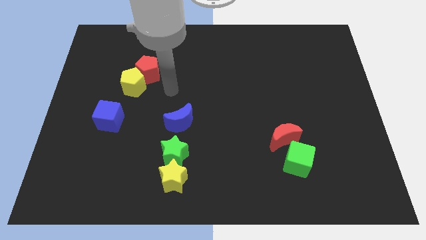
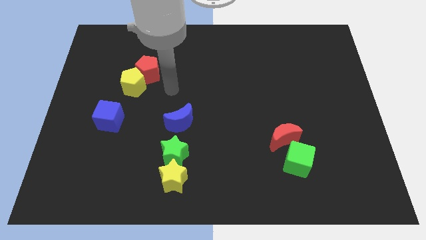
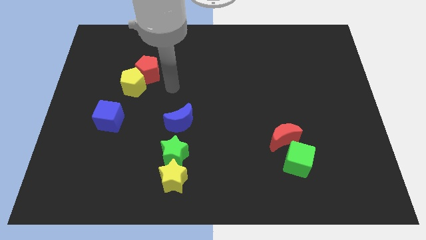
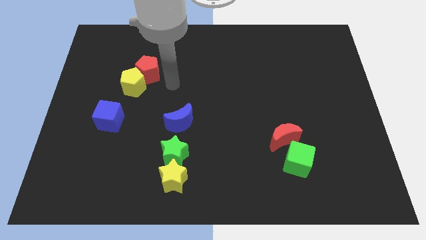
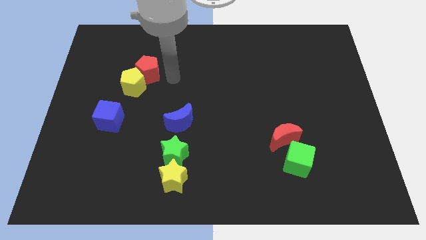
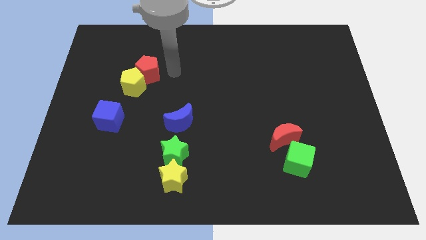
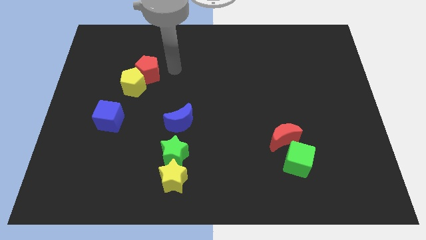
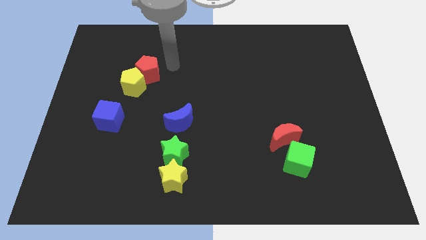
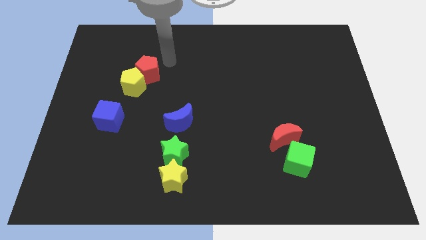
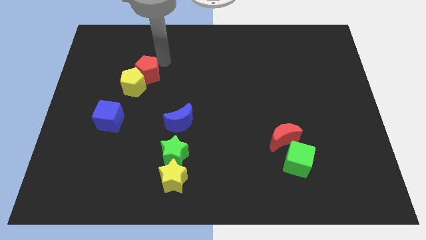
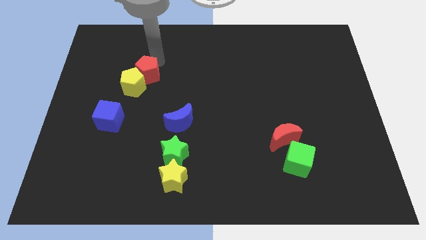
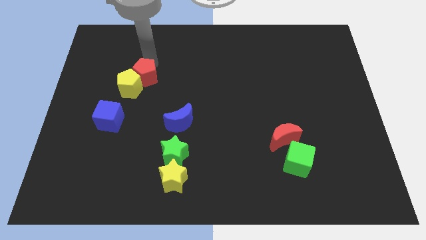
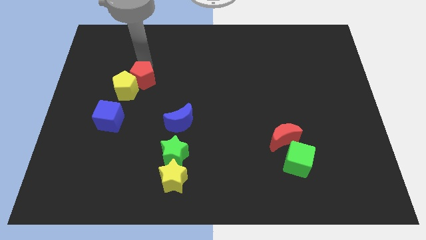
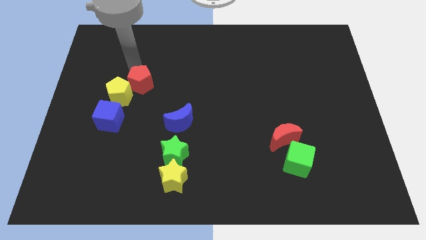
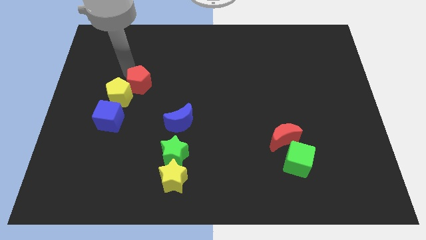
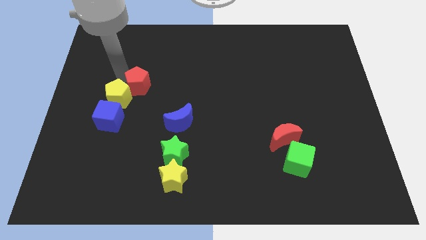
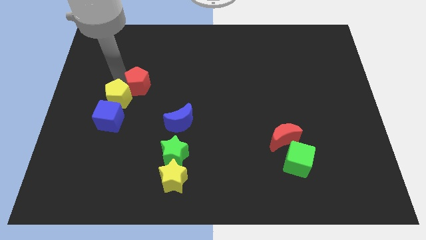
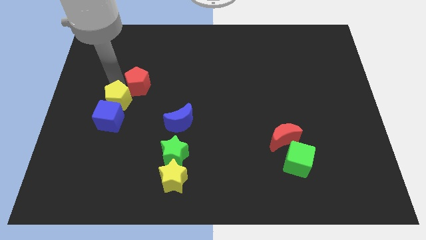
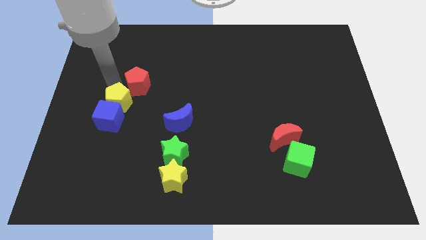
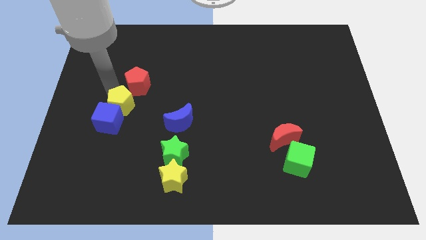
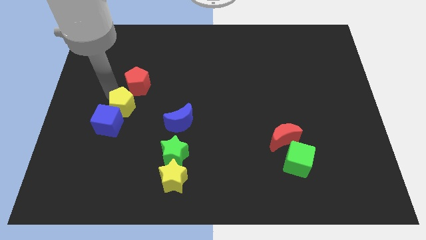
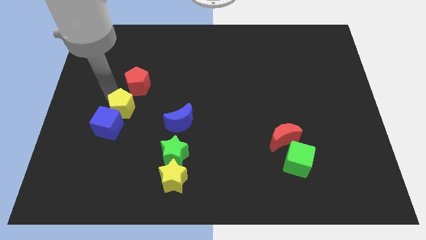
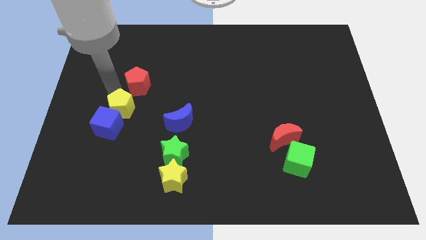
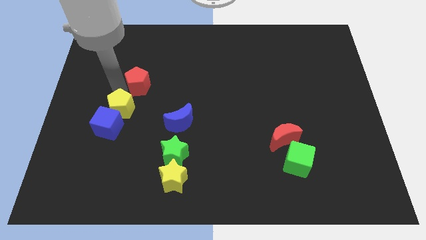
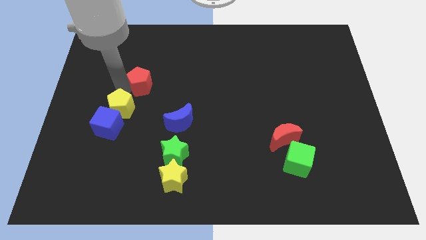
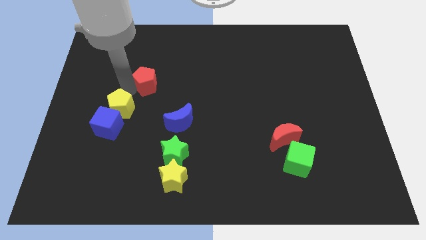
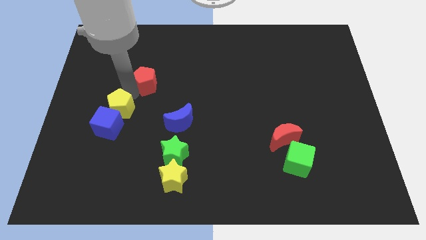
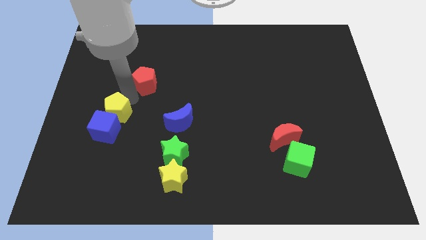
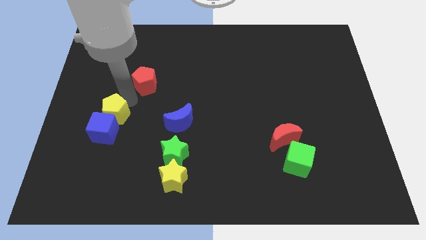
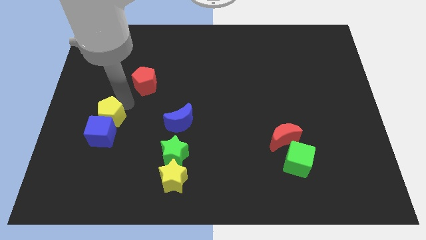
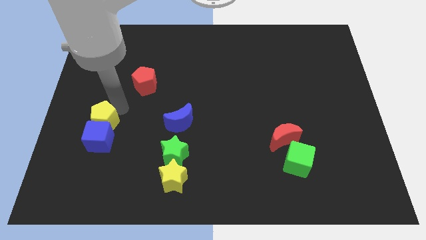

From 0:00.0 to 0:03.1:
separate red and yellow pentagons from each other

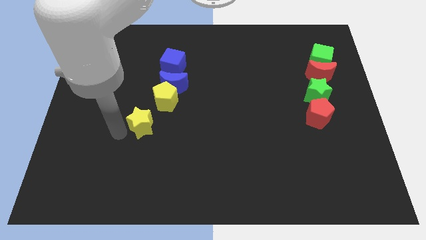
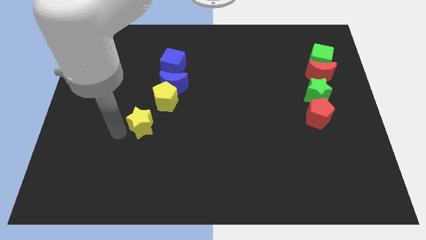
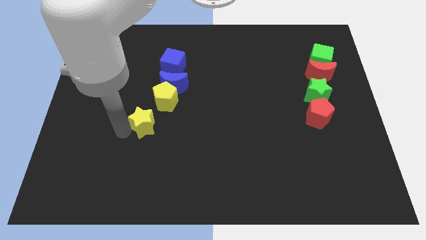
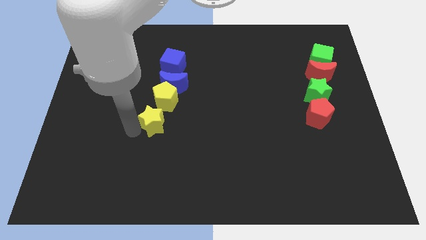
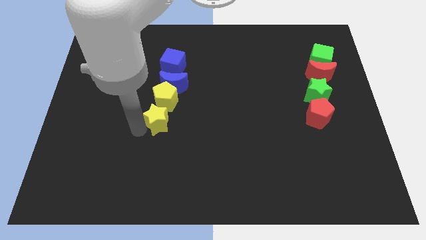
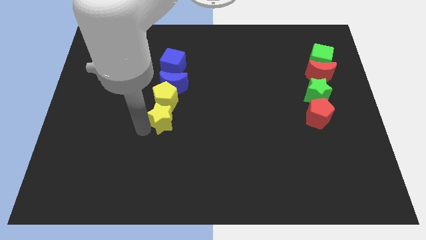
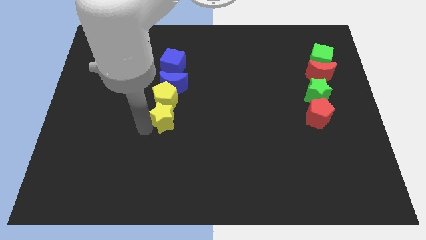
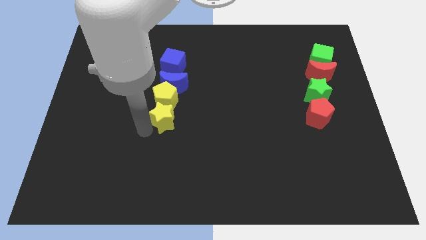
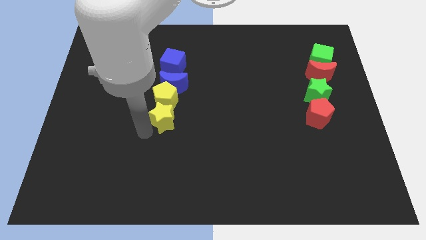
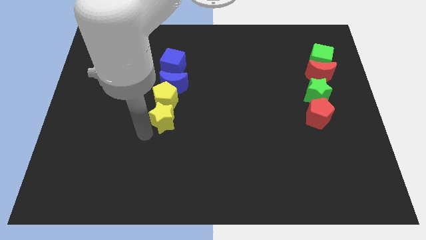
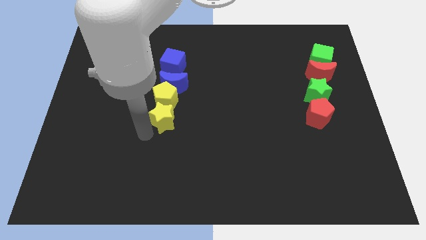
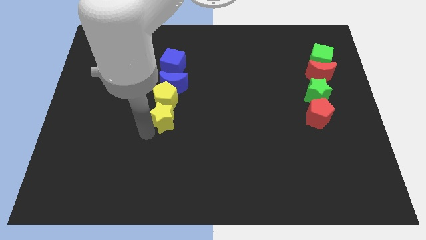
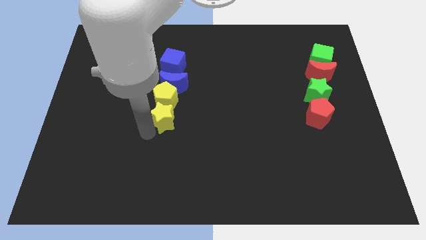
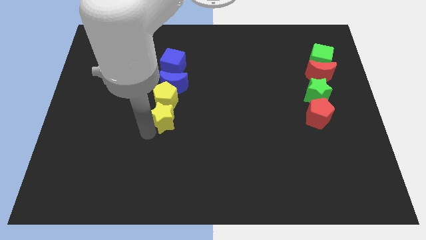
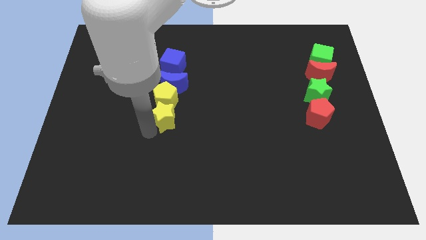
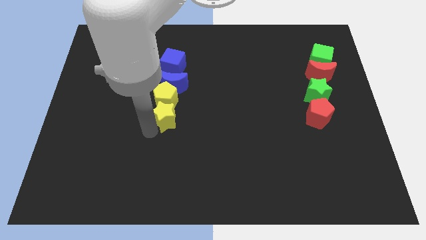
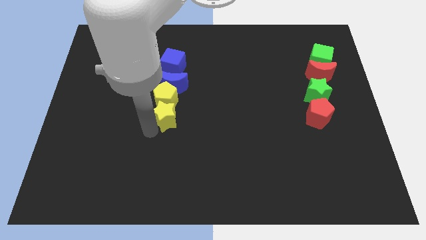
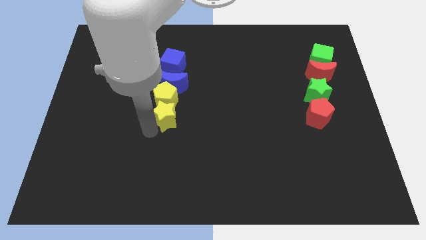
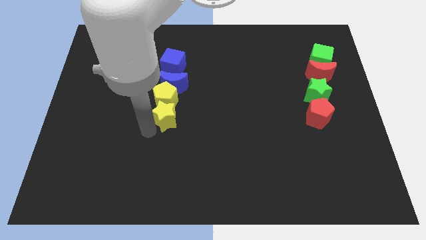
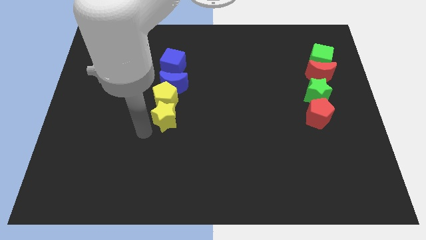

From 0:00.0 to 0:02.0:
push the yellow star below to the yellow pentagon

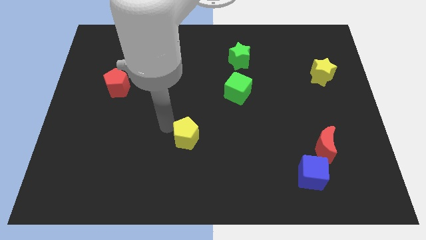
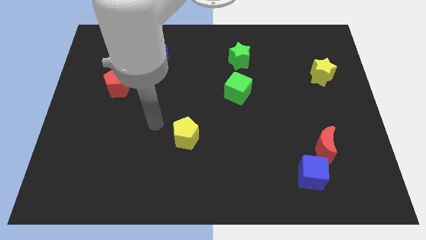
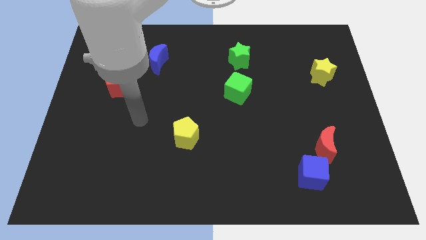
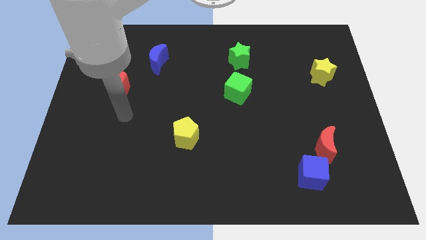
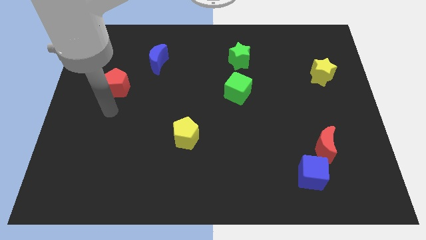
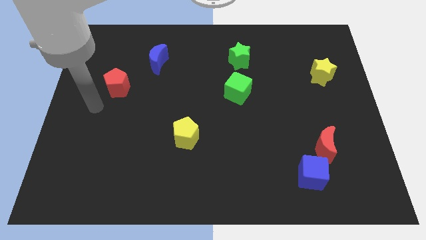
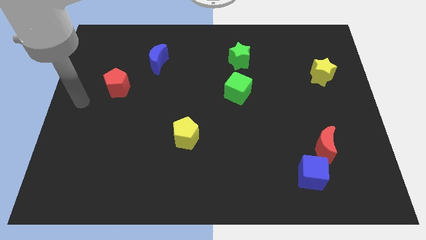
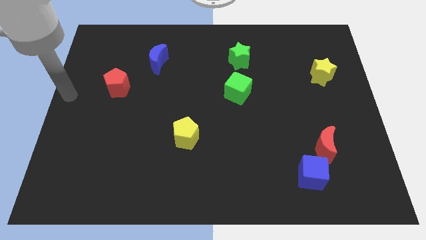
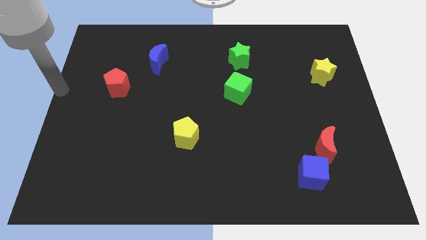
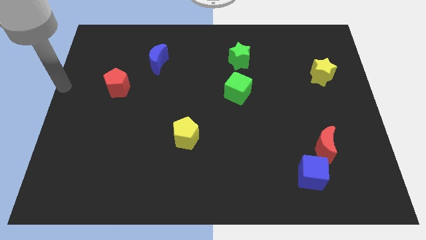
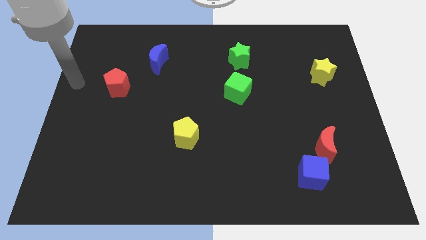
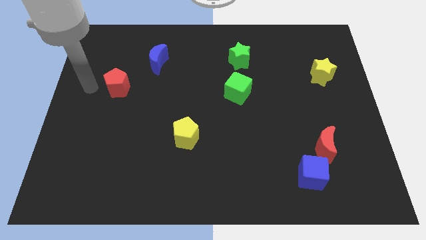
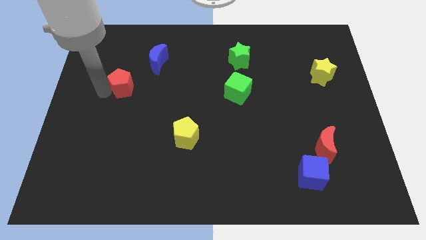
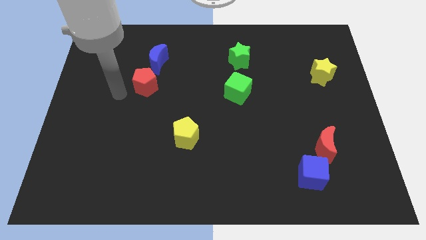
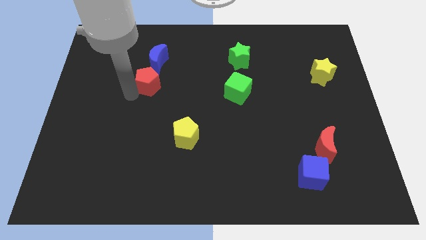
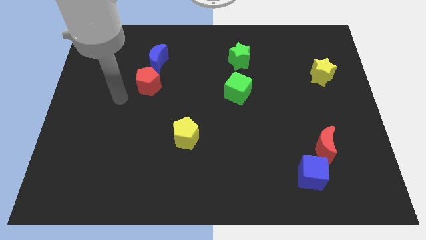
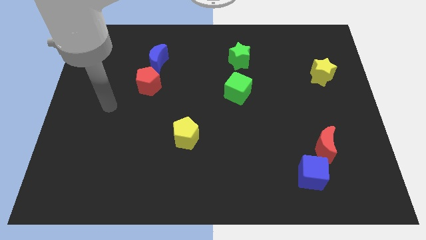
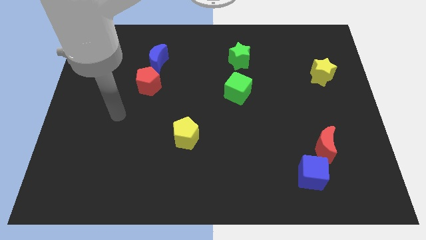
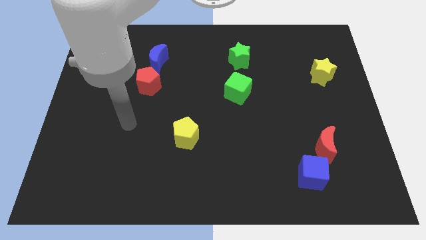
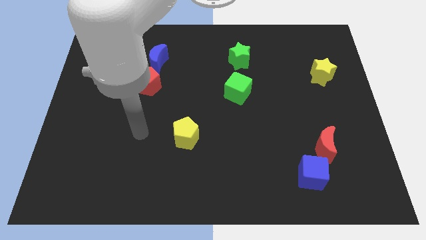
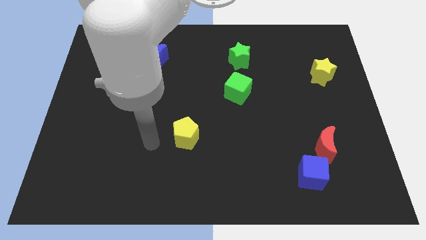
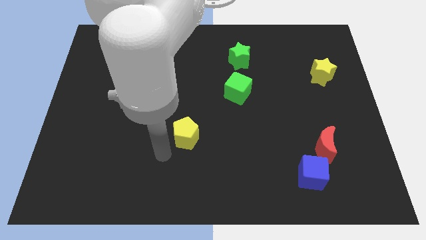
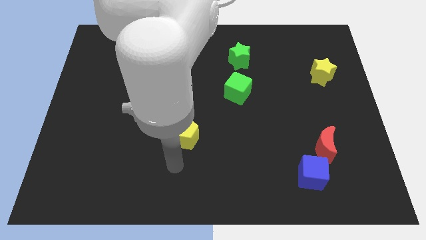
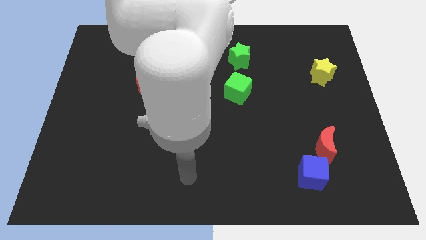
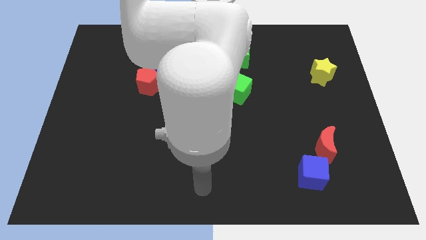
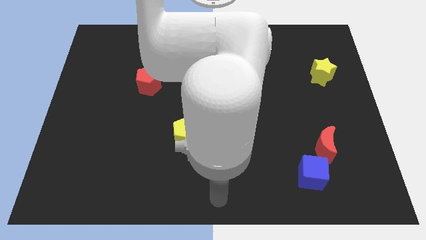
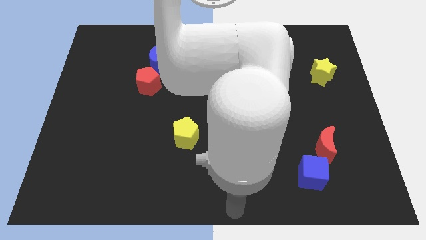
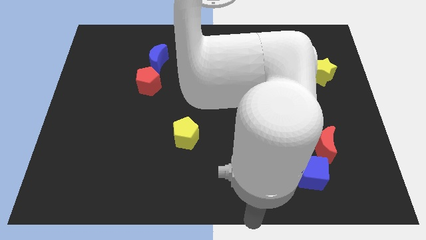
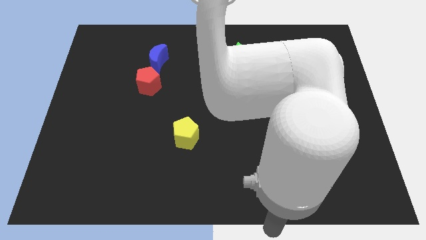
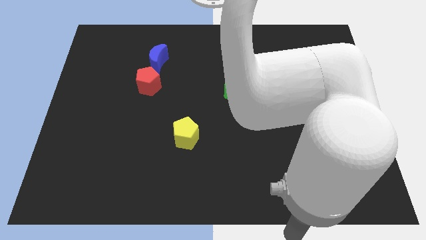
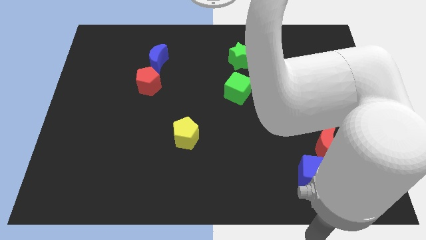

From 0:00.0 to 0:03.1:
slide the red pentagon to the bottom of the blue moon

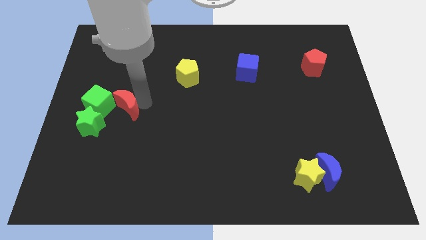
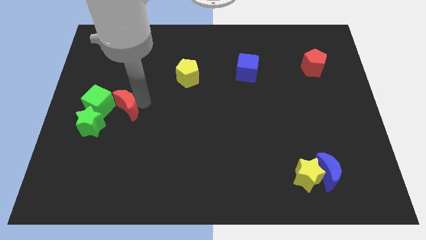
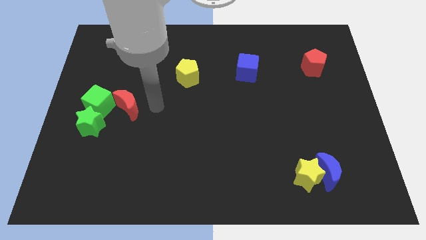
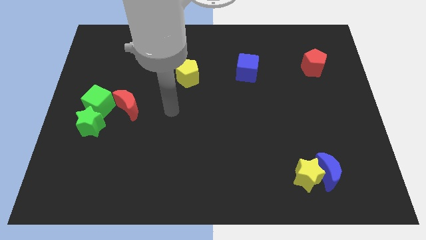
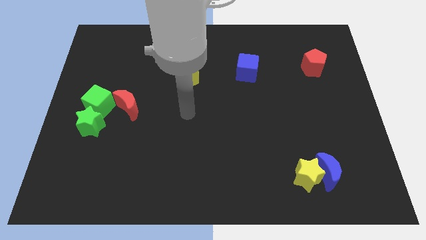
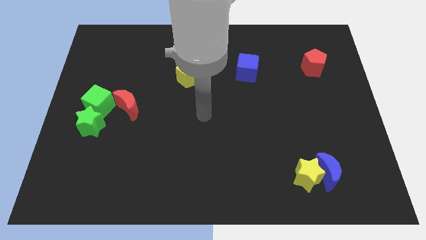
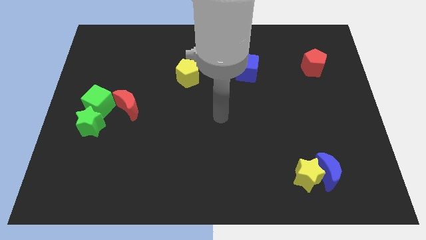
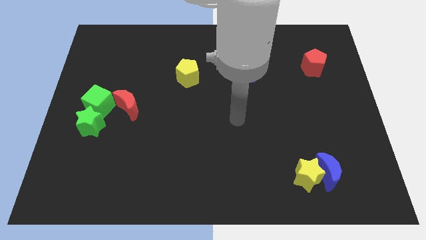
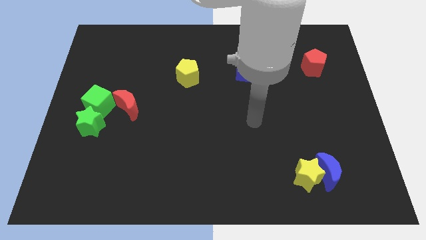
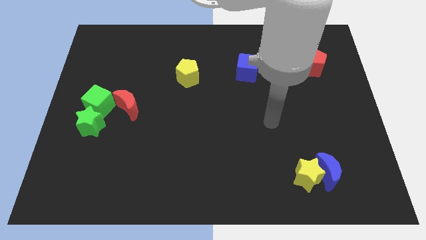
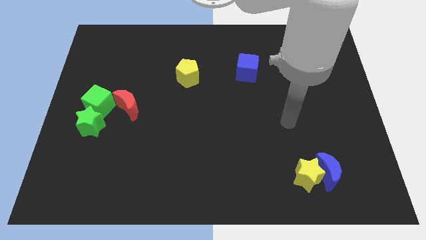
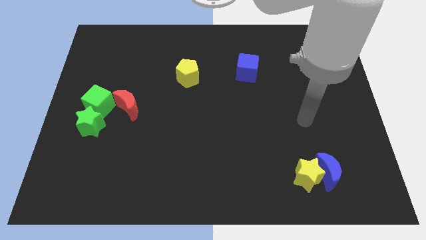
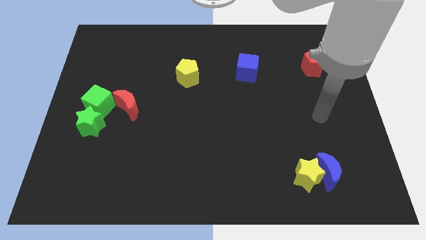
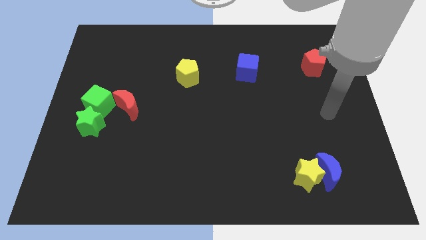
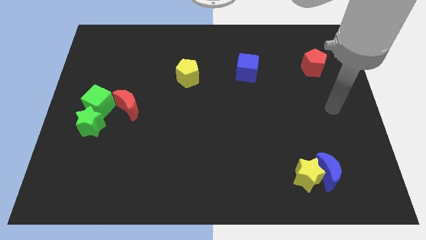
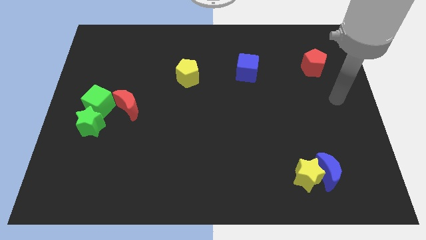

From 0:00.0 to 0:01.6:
go away from the red moon
